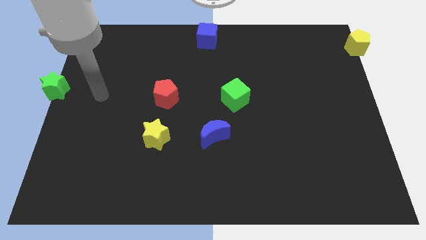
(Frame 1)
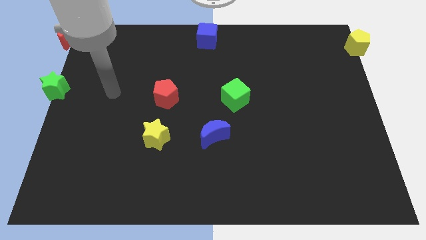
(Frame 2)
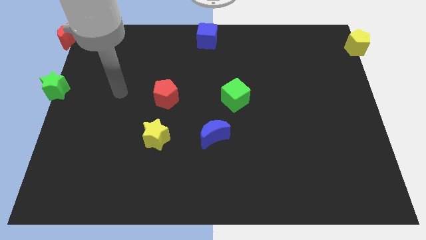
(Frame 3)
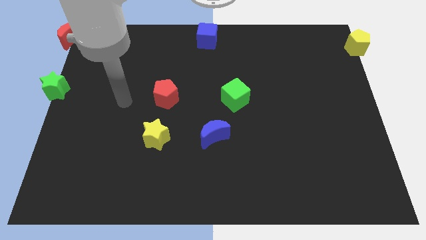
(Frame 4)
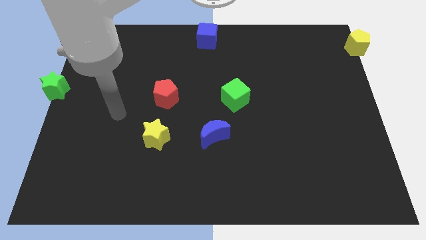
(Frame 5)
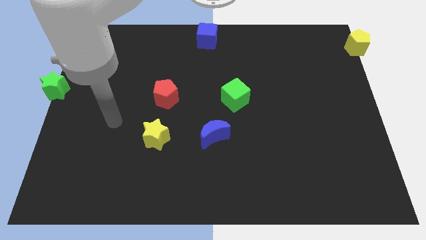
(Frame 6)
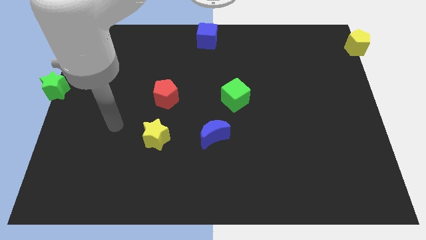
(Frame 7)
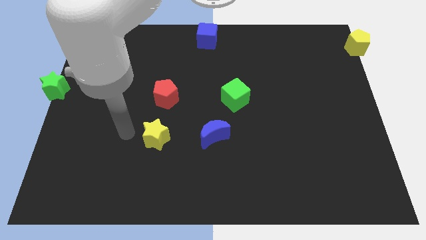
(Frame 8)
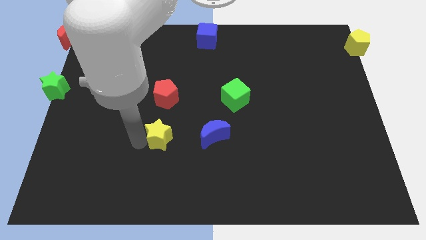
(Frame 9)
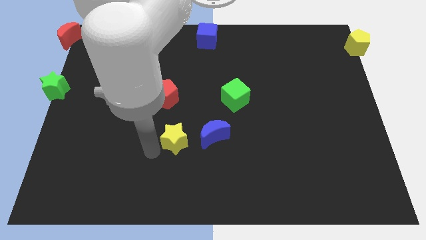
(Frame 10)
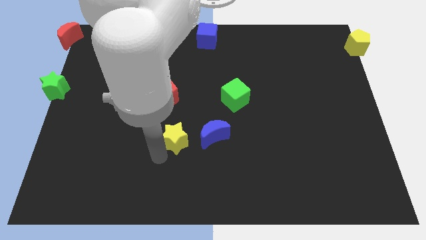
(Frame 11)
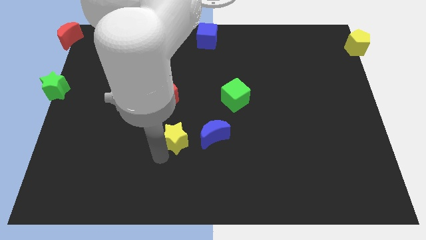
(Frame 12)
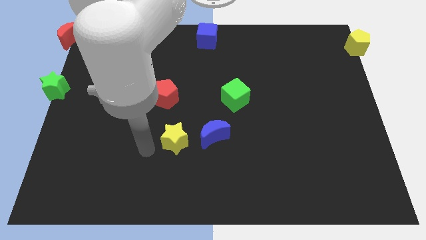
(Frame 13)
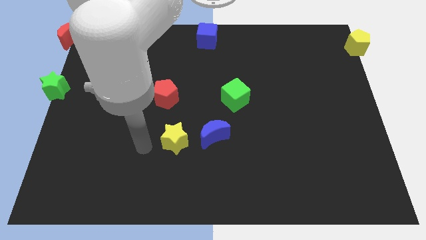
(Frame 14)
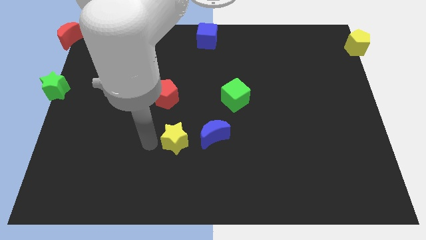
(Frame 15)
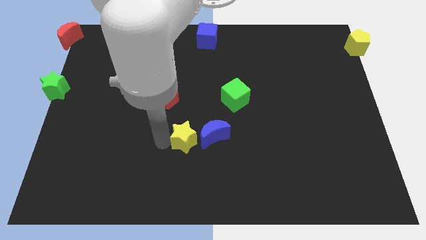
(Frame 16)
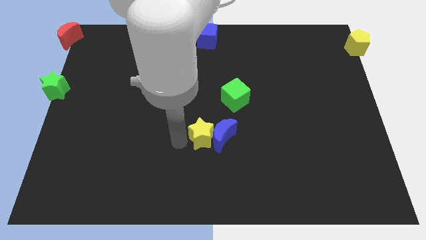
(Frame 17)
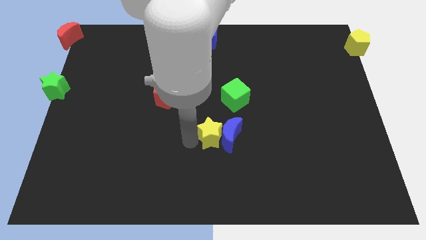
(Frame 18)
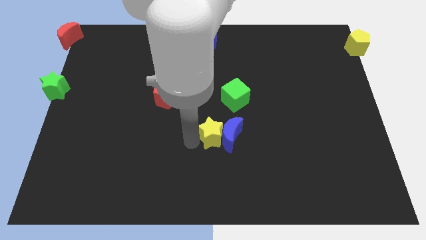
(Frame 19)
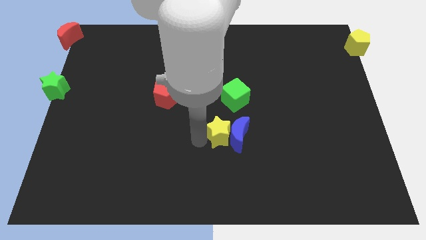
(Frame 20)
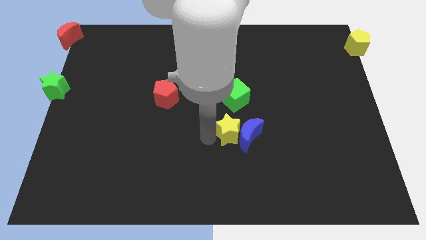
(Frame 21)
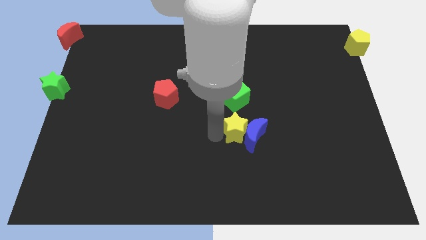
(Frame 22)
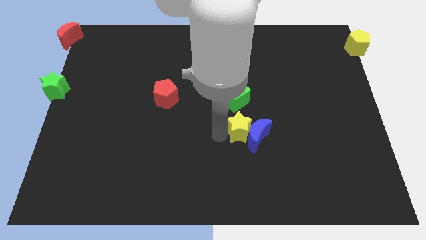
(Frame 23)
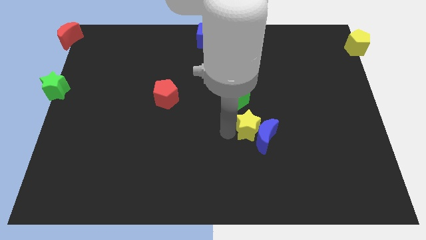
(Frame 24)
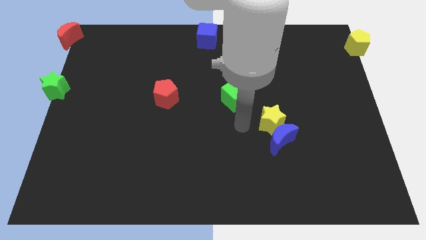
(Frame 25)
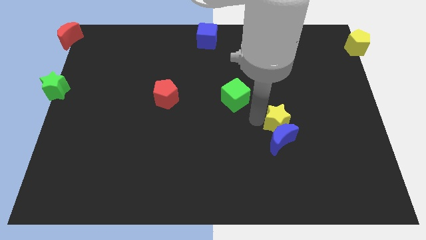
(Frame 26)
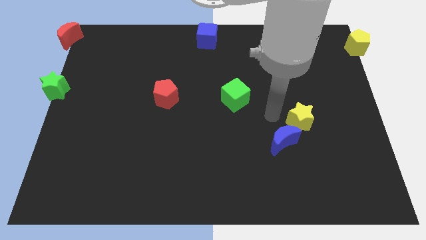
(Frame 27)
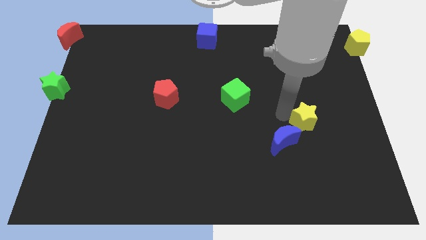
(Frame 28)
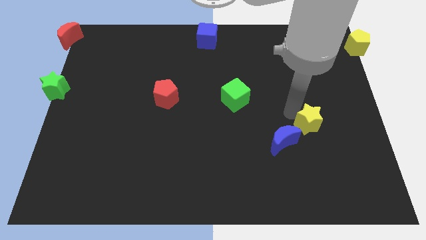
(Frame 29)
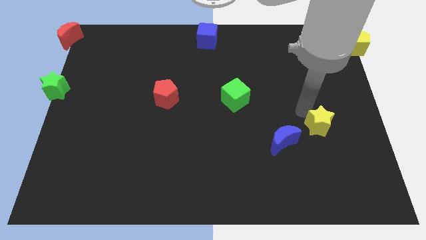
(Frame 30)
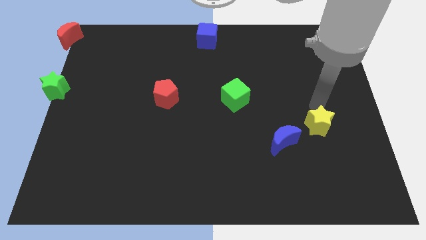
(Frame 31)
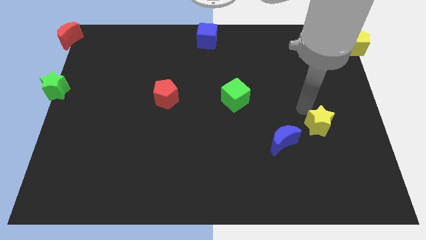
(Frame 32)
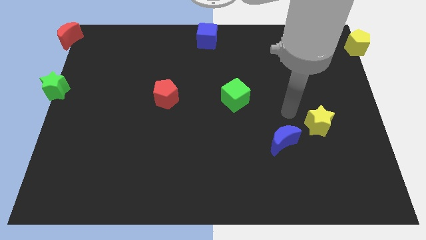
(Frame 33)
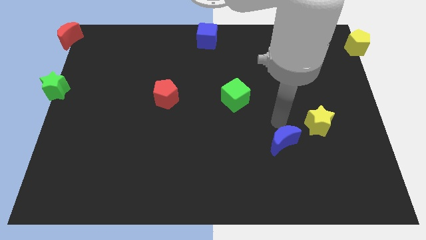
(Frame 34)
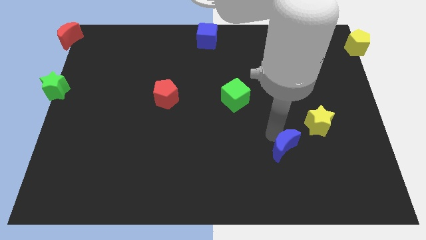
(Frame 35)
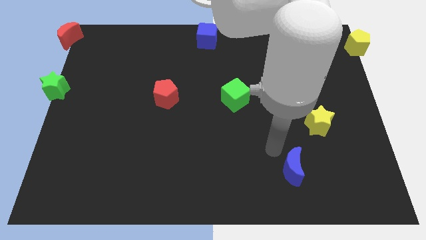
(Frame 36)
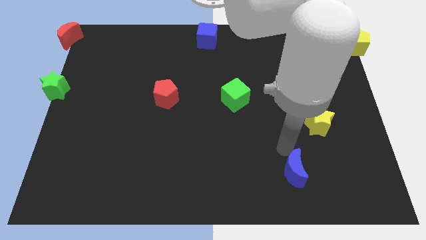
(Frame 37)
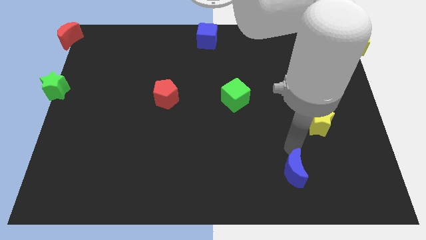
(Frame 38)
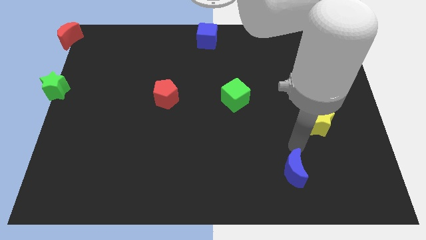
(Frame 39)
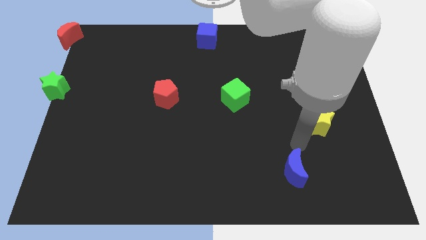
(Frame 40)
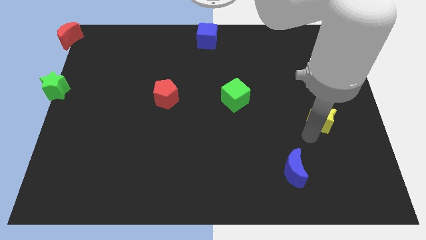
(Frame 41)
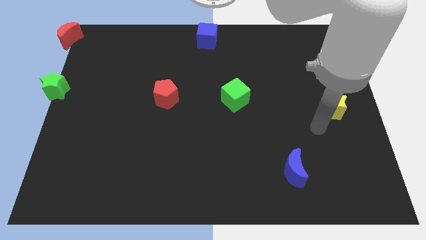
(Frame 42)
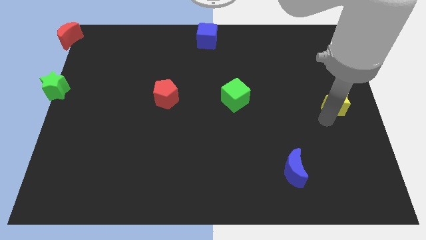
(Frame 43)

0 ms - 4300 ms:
push the yellow star towards the right center

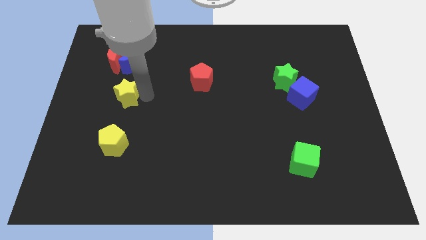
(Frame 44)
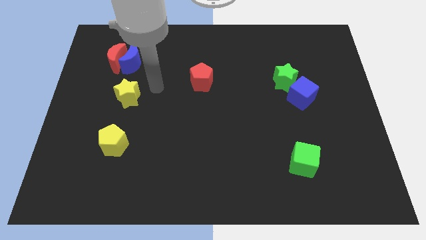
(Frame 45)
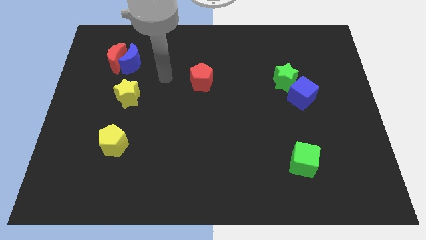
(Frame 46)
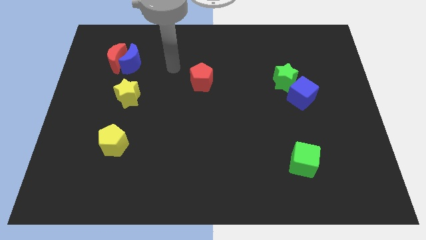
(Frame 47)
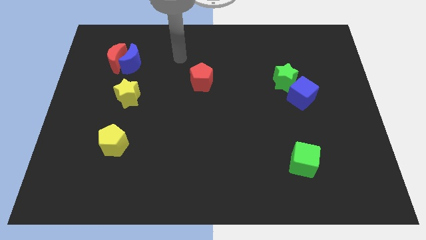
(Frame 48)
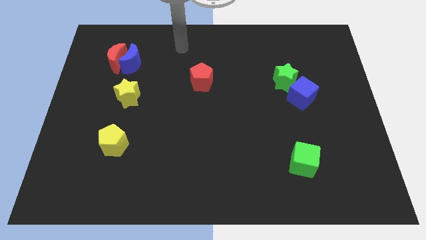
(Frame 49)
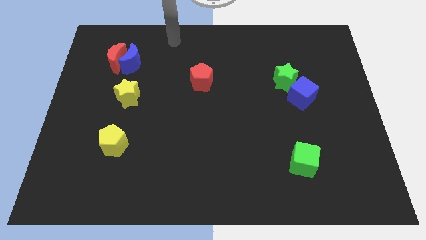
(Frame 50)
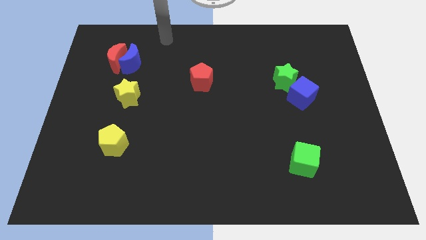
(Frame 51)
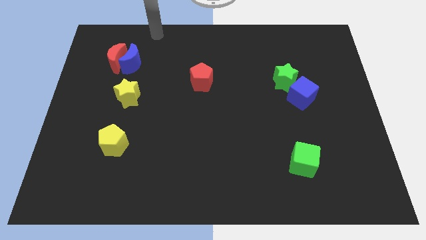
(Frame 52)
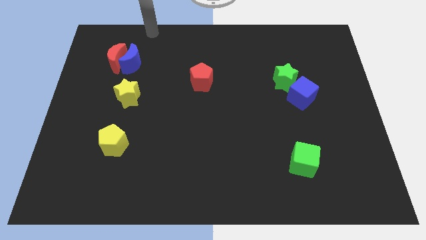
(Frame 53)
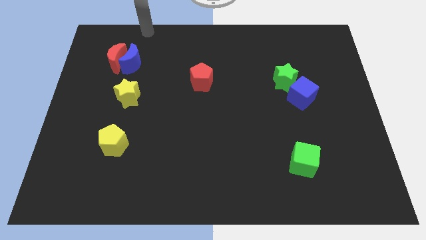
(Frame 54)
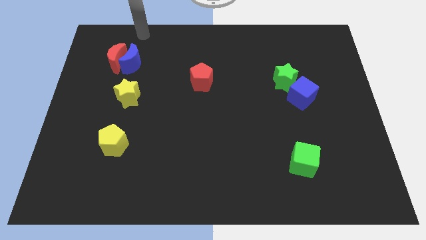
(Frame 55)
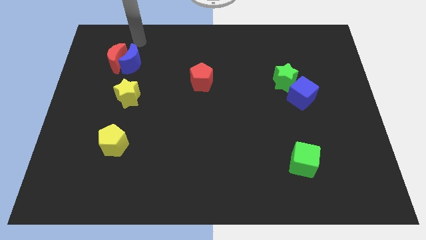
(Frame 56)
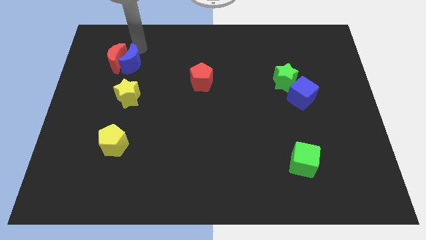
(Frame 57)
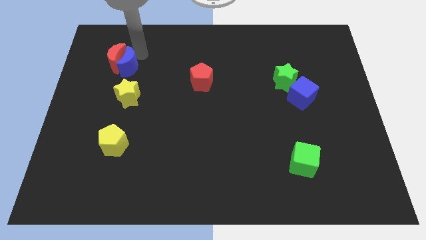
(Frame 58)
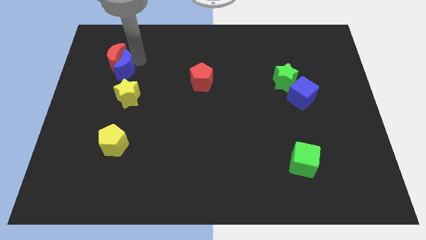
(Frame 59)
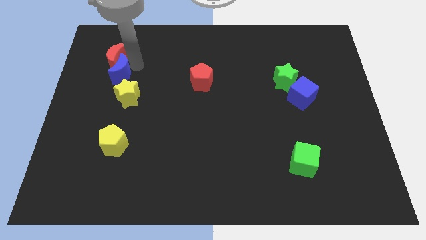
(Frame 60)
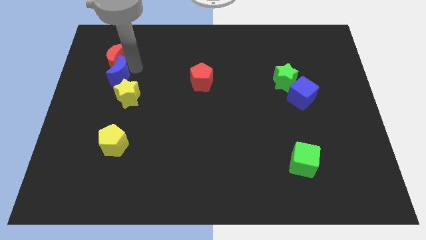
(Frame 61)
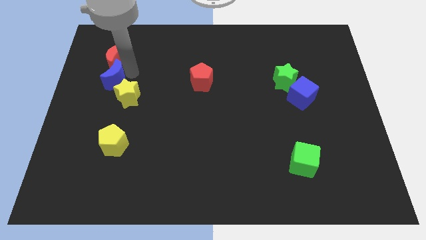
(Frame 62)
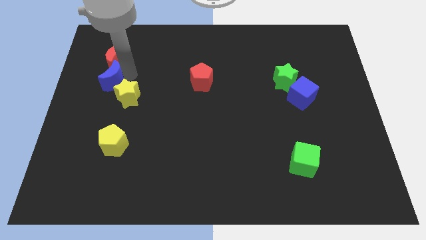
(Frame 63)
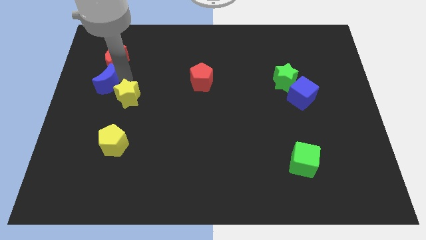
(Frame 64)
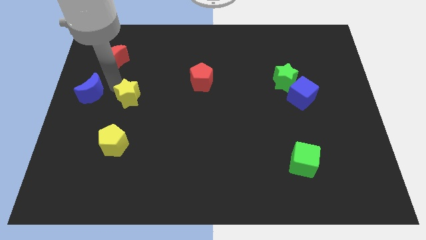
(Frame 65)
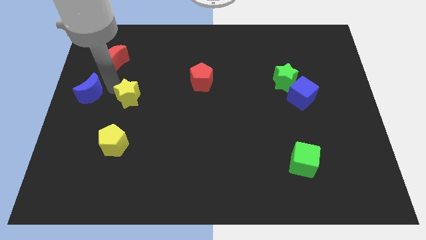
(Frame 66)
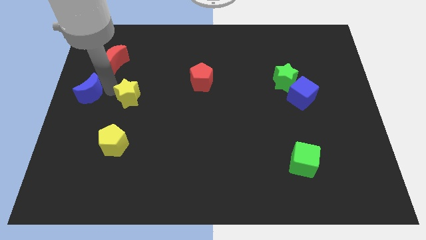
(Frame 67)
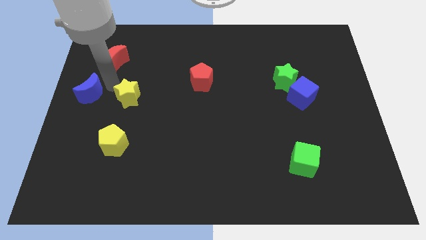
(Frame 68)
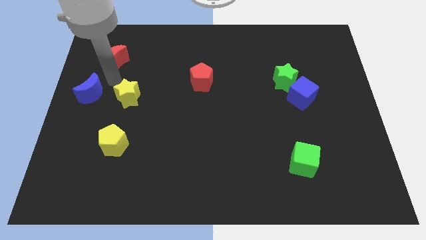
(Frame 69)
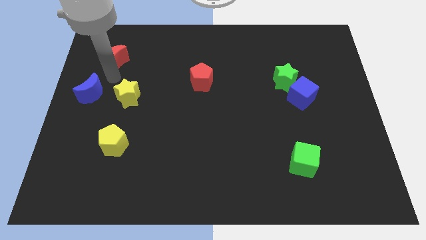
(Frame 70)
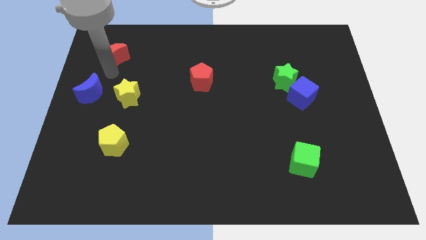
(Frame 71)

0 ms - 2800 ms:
push the blue crescent to the left of the yellow star

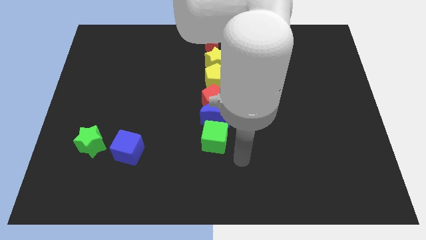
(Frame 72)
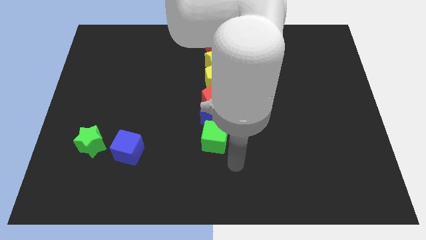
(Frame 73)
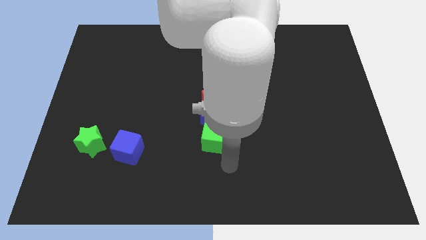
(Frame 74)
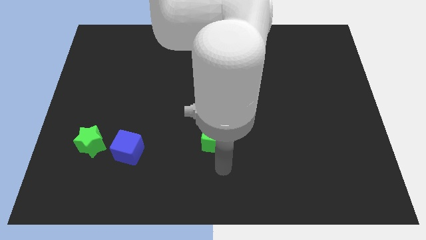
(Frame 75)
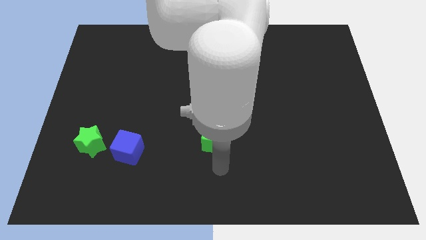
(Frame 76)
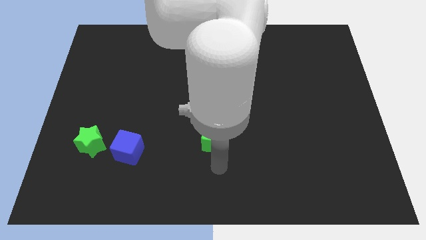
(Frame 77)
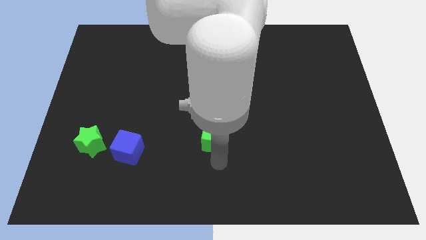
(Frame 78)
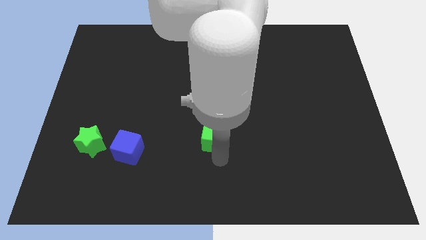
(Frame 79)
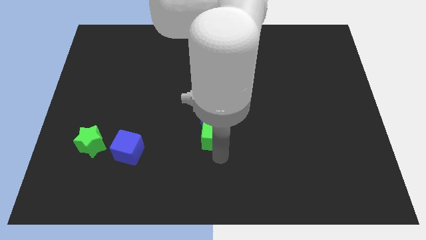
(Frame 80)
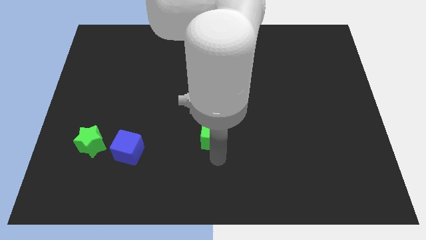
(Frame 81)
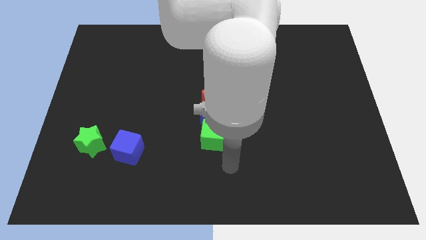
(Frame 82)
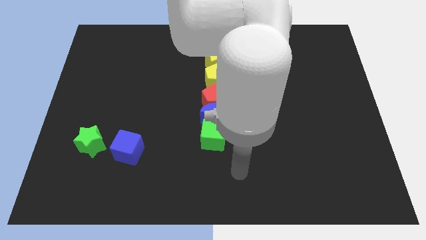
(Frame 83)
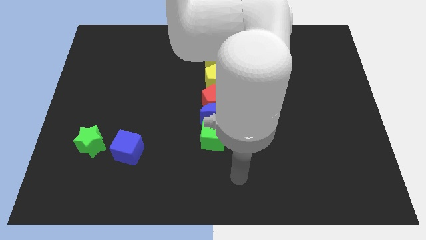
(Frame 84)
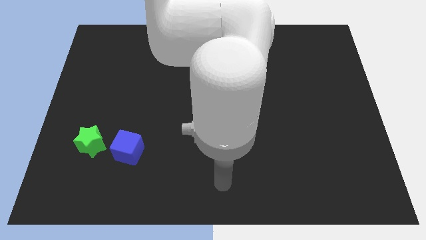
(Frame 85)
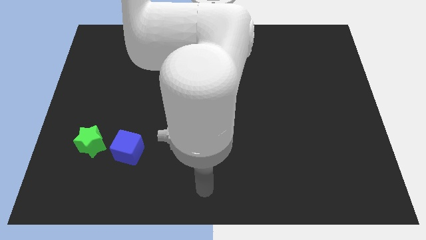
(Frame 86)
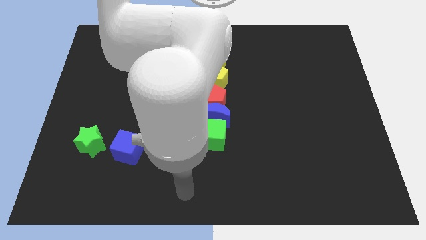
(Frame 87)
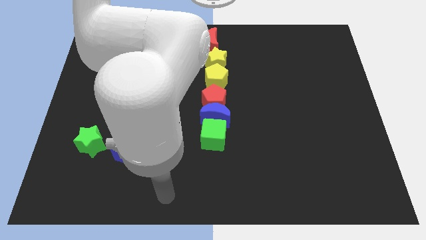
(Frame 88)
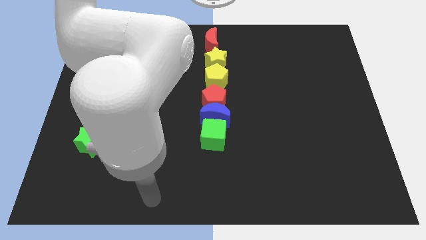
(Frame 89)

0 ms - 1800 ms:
slide the green cube slightly to the top side

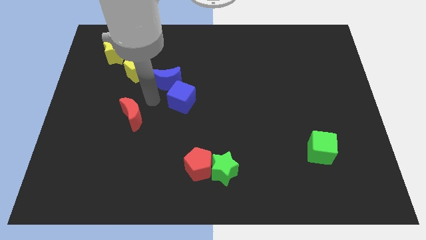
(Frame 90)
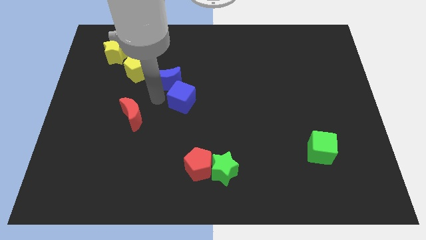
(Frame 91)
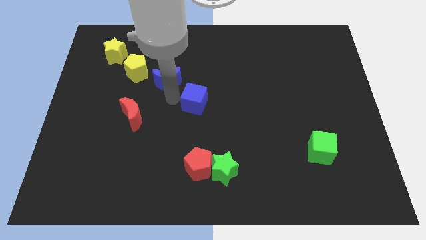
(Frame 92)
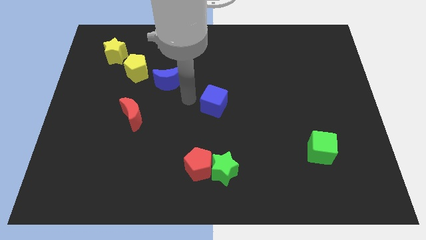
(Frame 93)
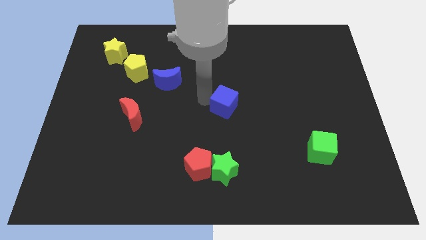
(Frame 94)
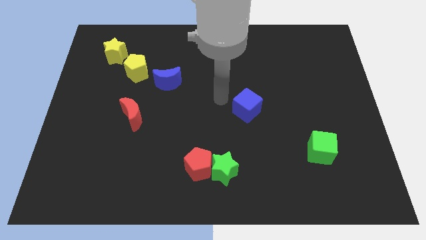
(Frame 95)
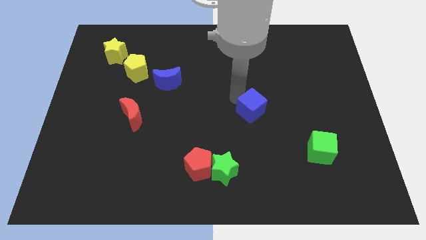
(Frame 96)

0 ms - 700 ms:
move the blue cube to the center of the board
